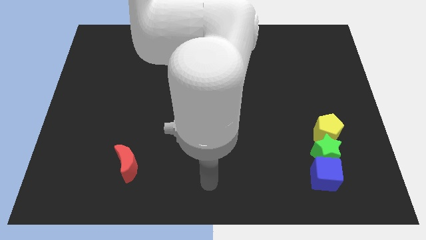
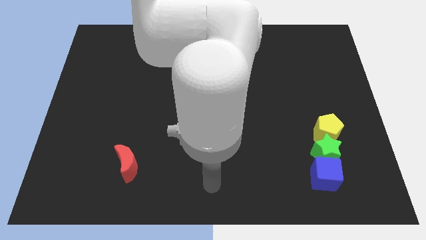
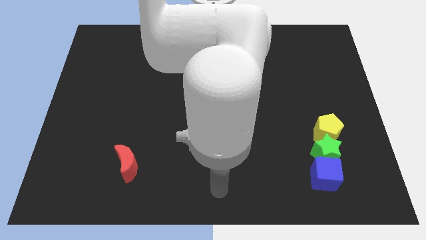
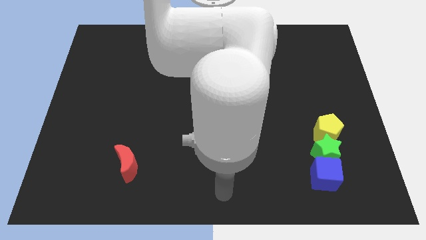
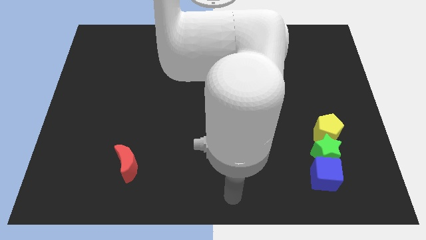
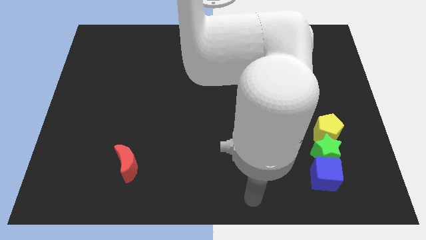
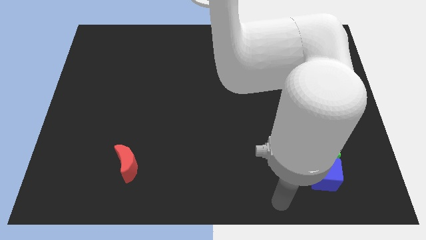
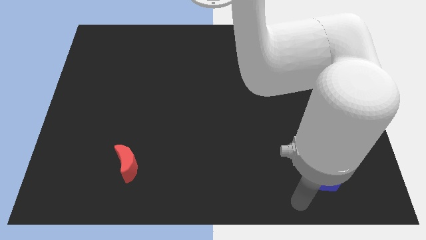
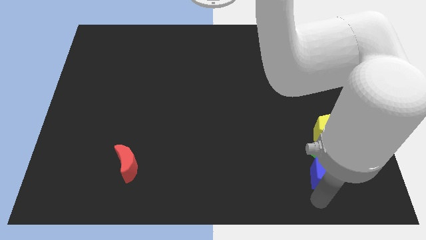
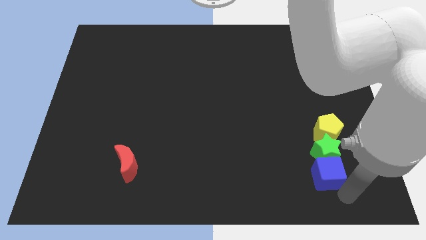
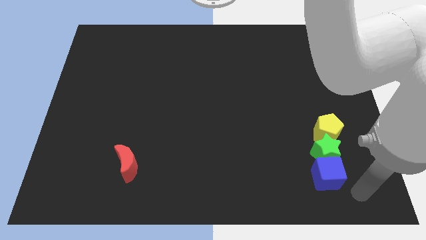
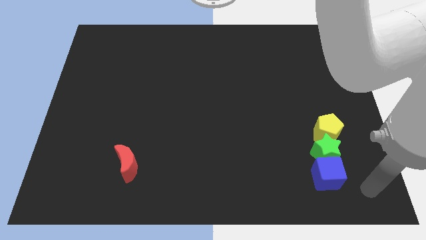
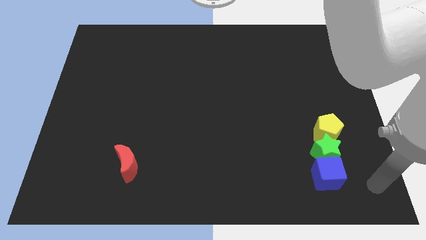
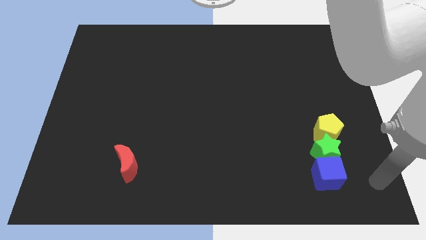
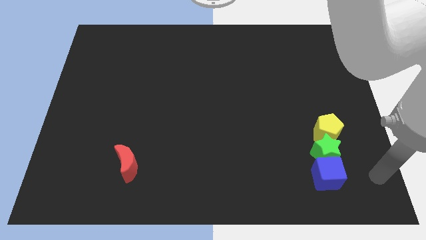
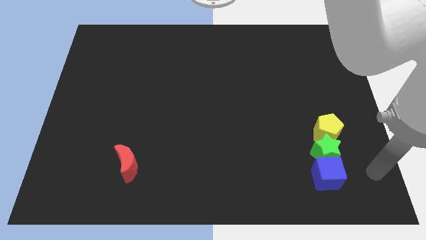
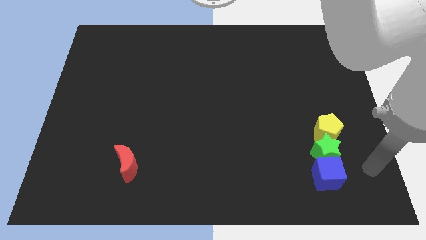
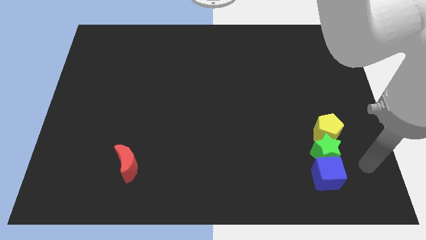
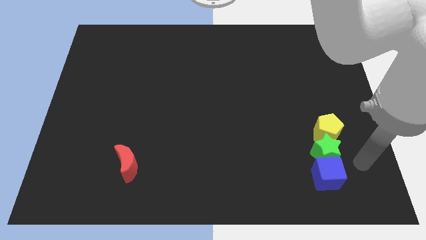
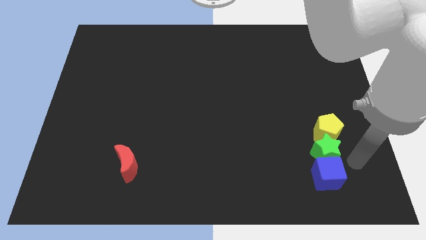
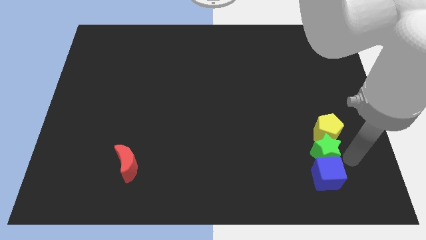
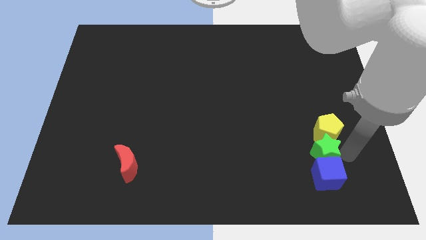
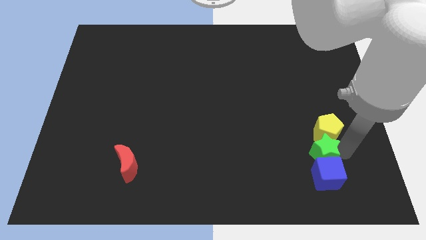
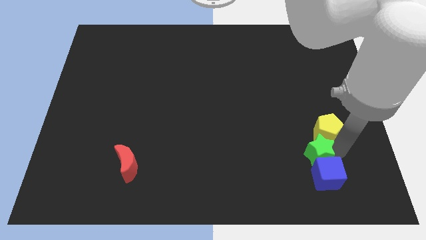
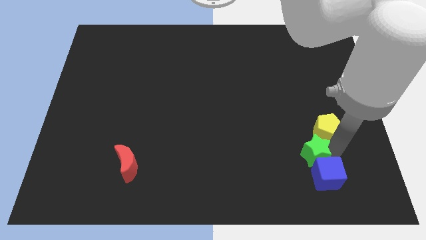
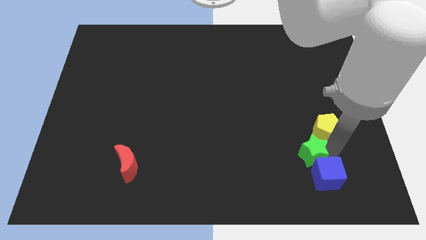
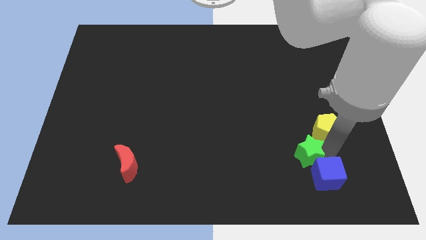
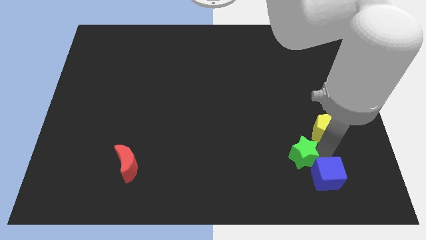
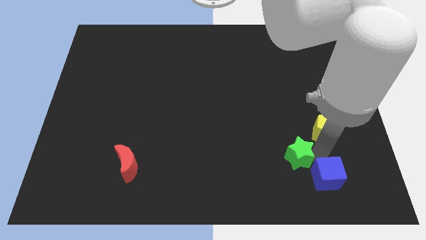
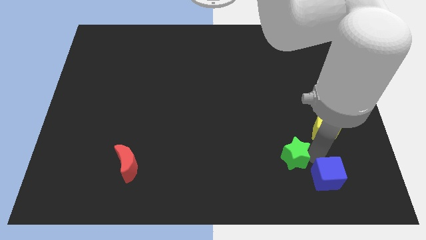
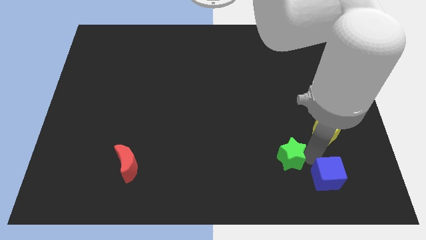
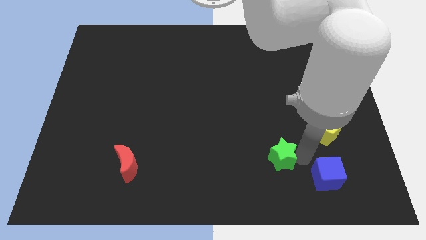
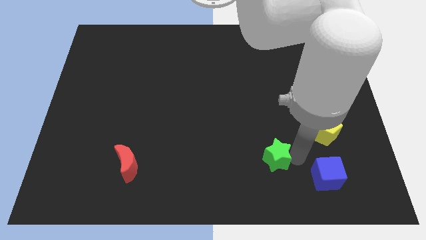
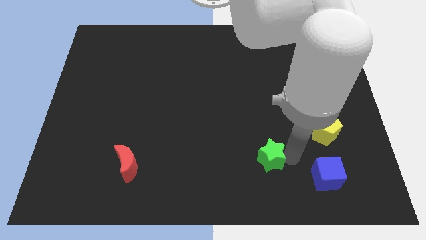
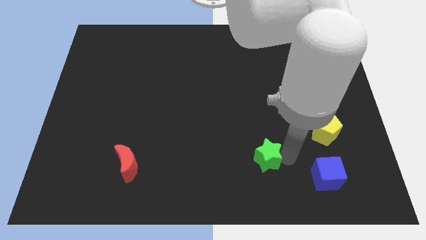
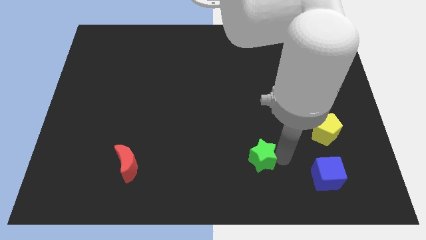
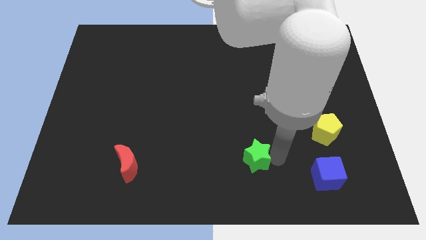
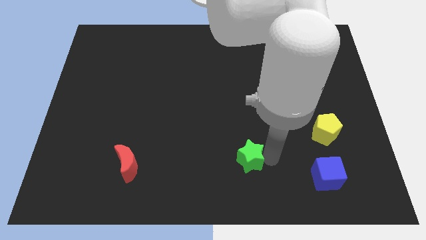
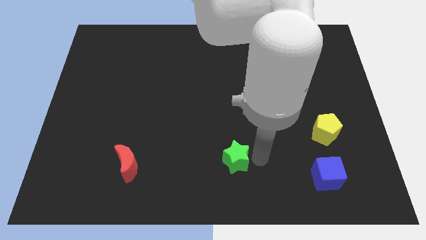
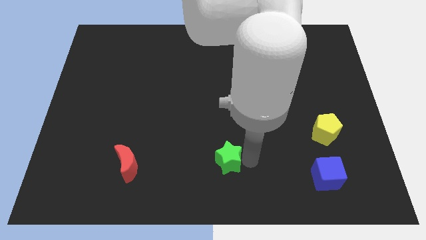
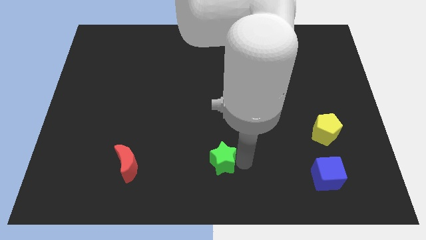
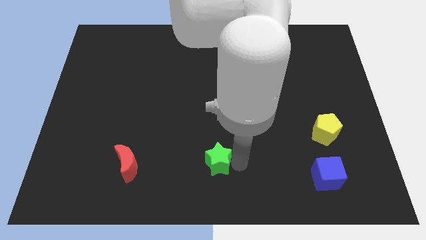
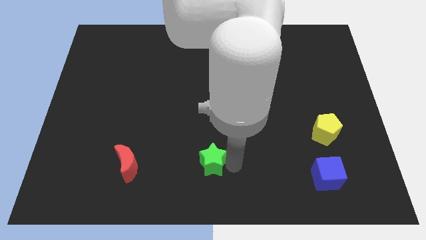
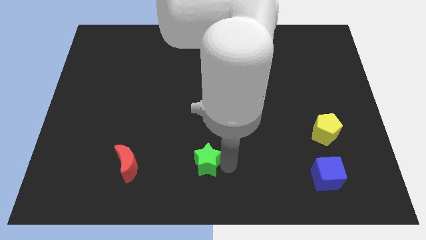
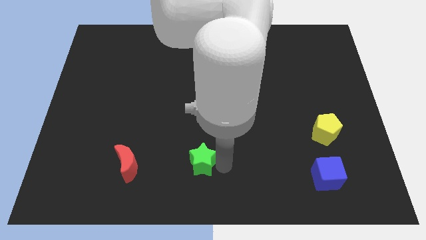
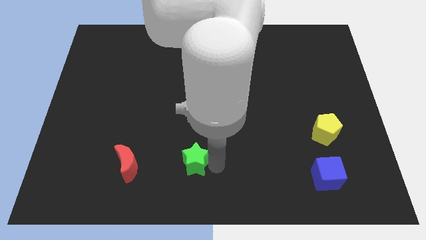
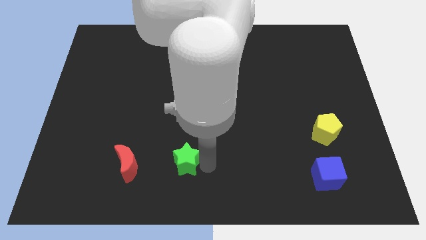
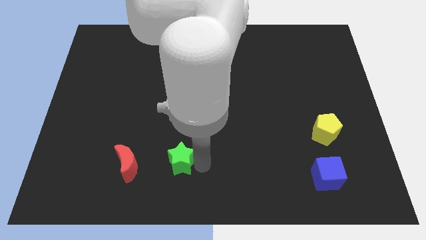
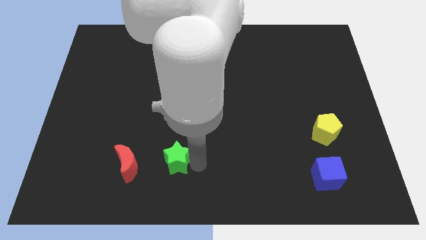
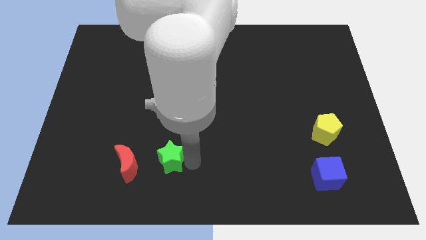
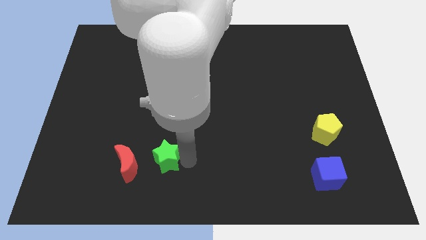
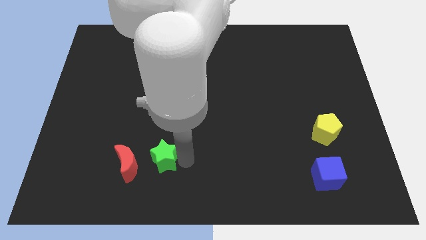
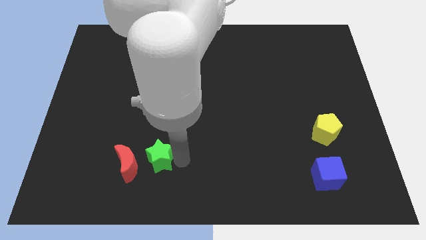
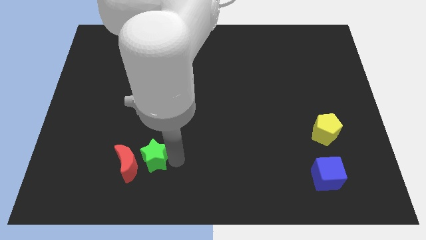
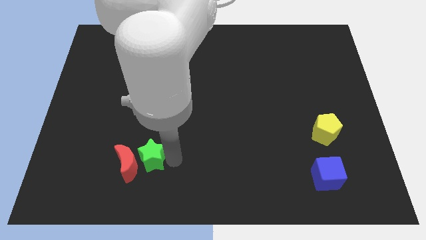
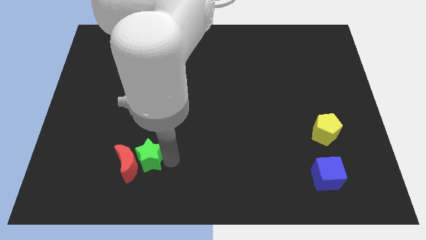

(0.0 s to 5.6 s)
move the star to the moon

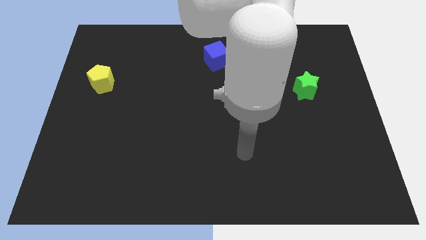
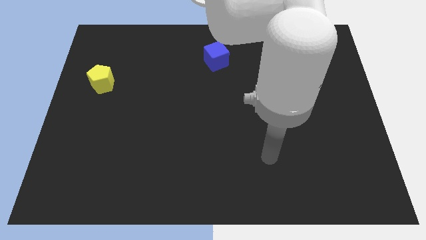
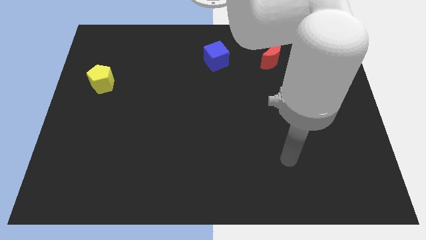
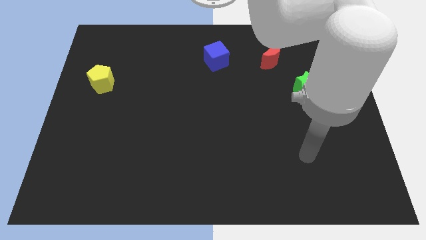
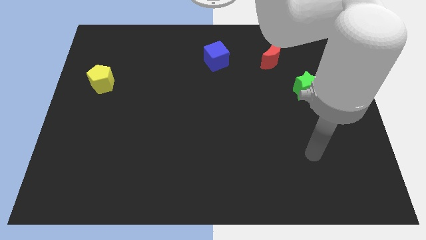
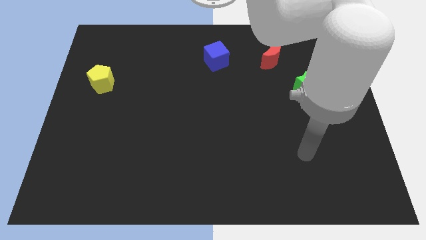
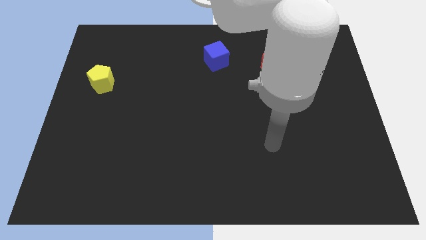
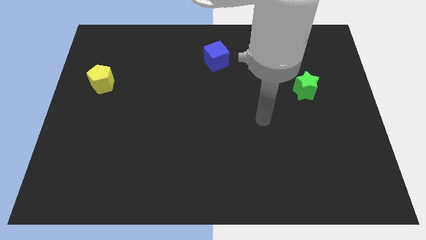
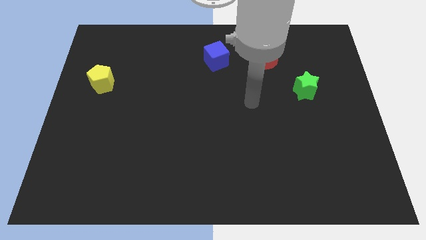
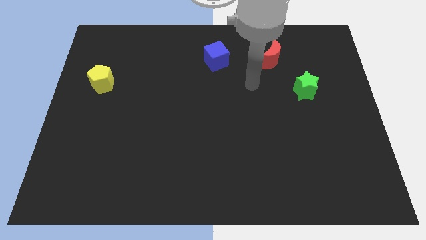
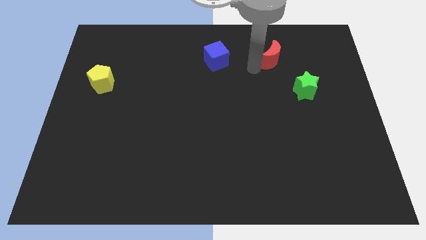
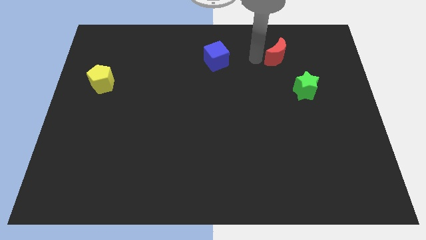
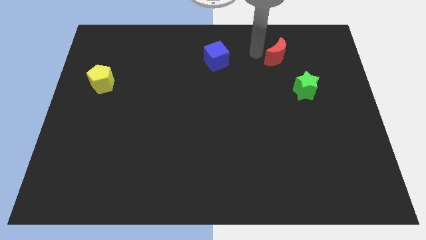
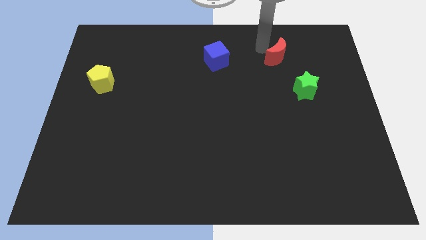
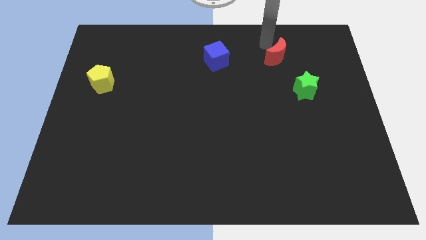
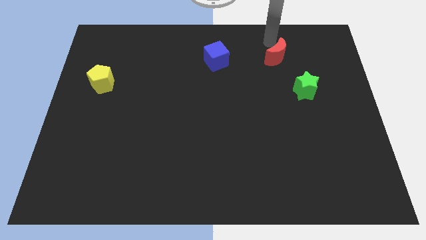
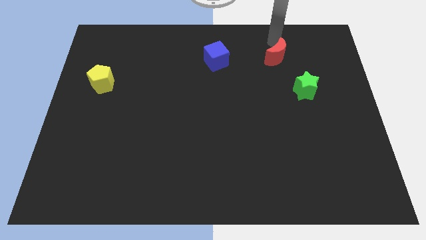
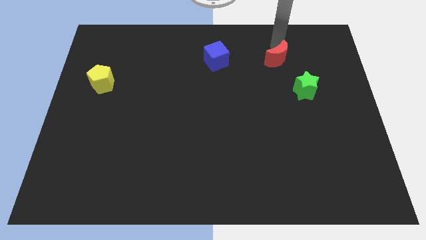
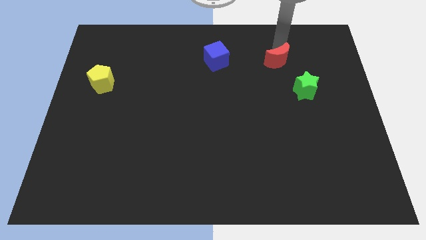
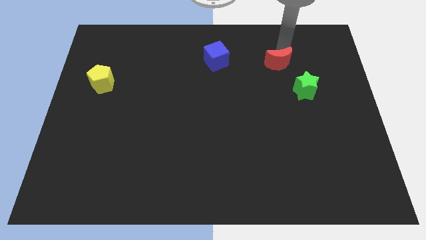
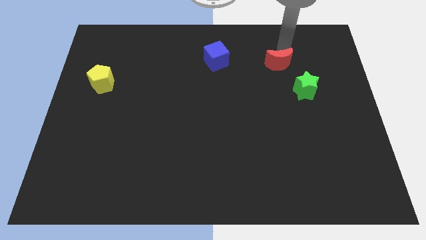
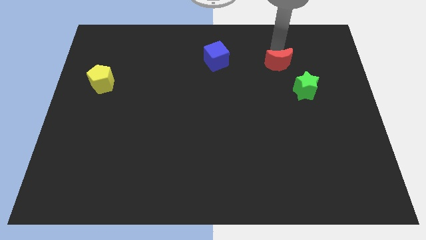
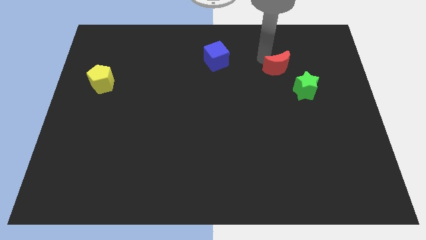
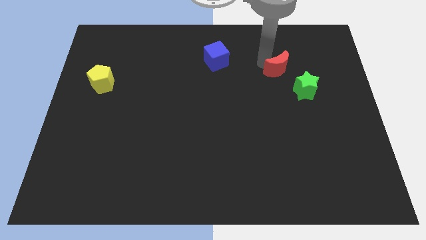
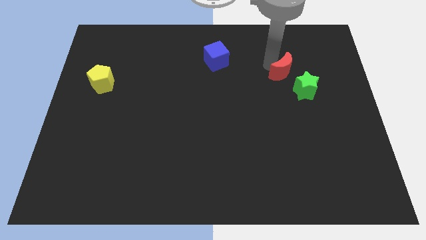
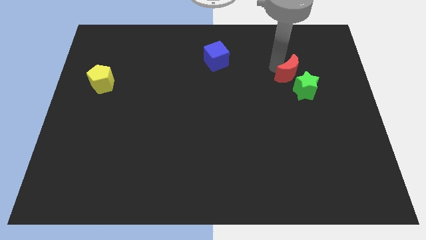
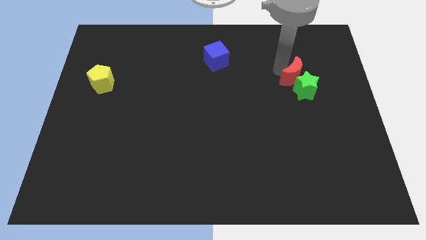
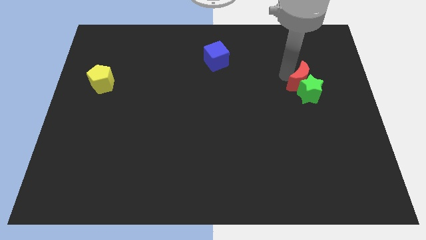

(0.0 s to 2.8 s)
put the red block to the green star

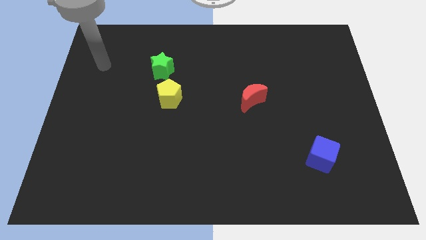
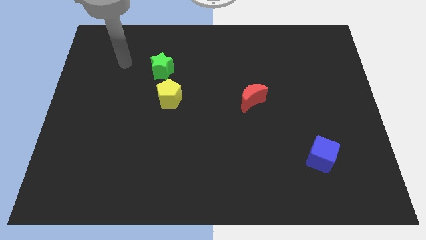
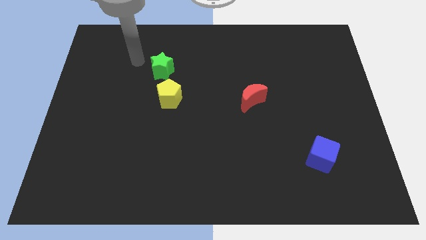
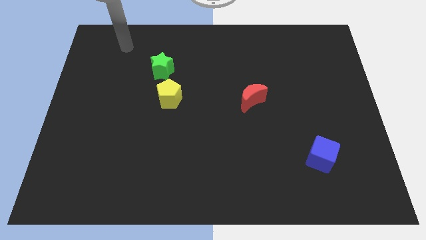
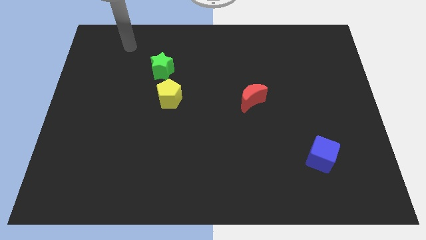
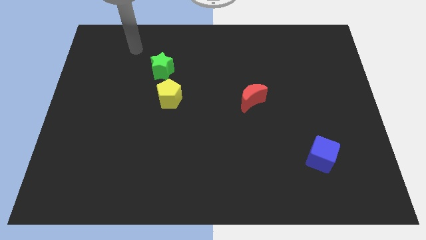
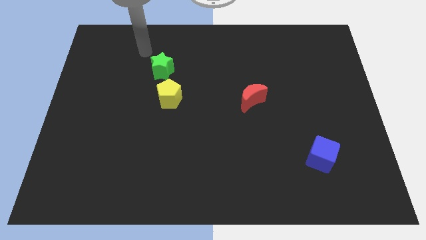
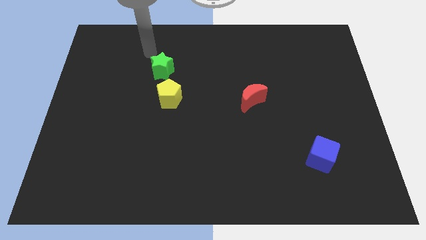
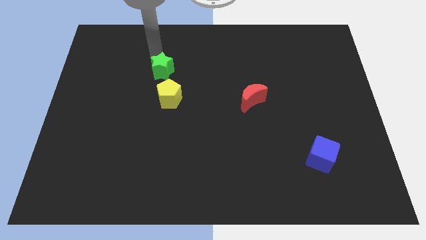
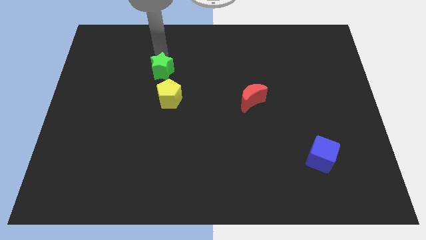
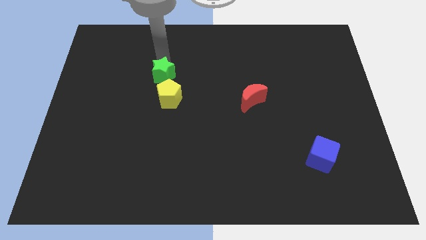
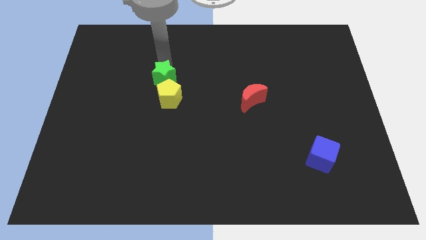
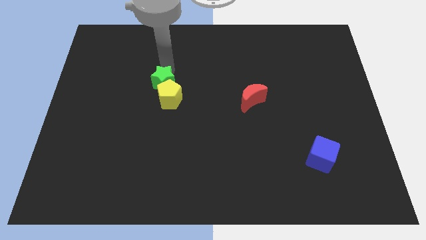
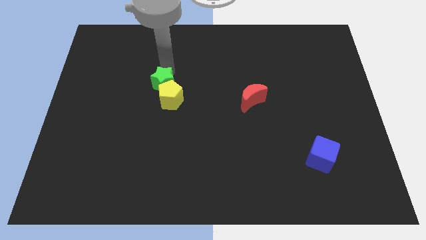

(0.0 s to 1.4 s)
move the green star towards the yellow block
